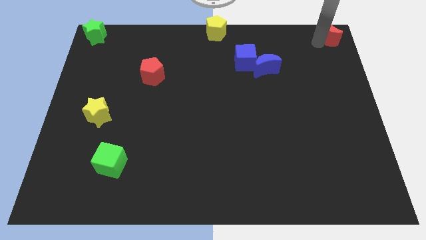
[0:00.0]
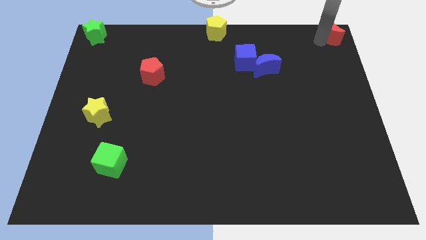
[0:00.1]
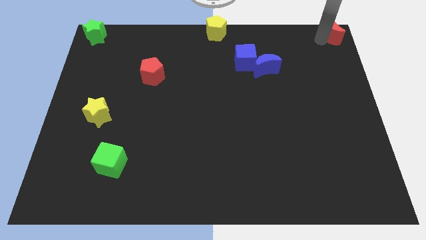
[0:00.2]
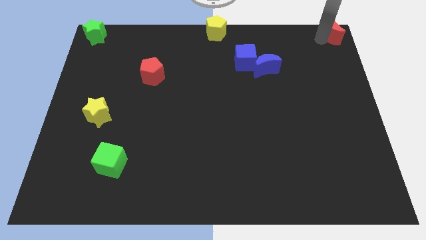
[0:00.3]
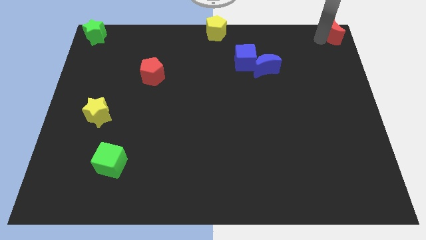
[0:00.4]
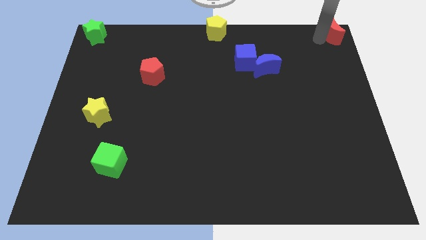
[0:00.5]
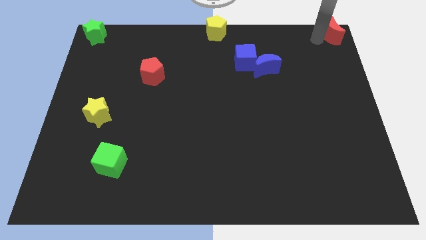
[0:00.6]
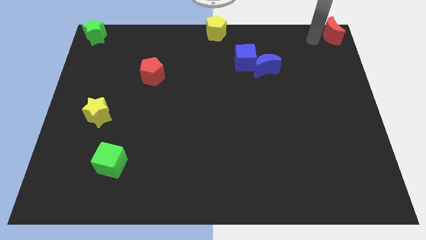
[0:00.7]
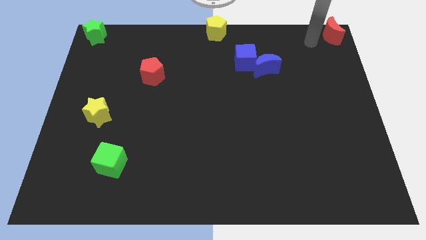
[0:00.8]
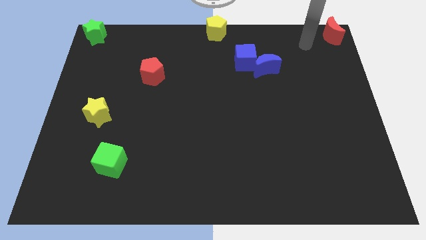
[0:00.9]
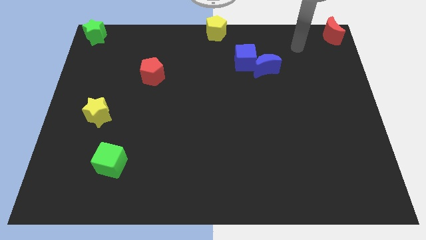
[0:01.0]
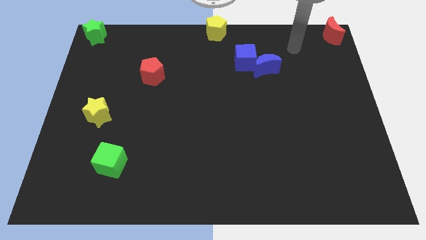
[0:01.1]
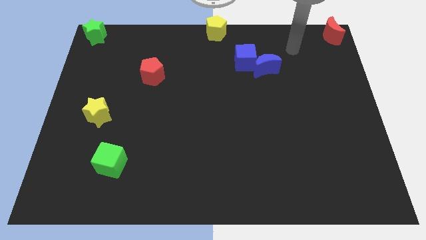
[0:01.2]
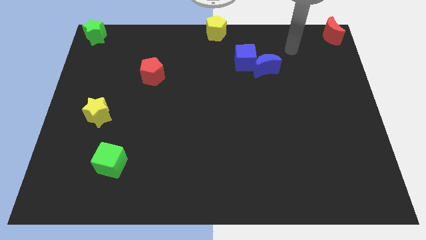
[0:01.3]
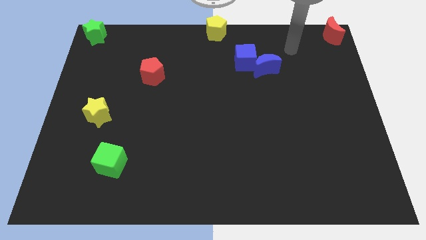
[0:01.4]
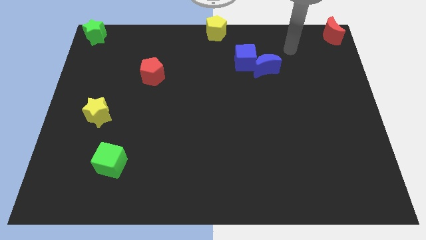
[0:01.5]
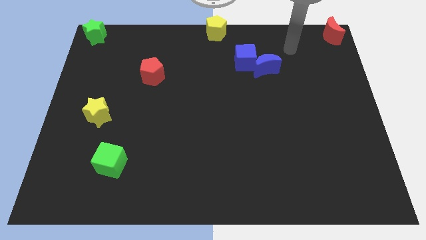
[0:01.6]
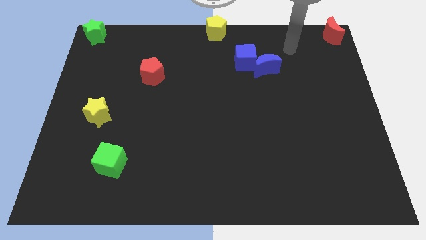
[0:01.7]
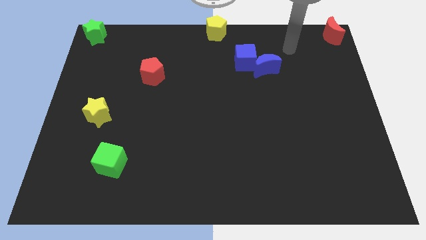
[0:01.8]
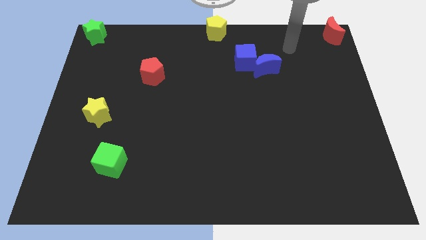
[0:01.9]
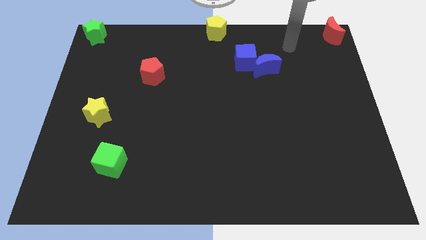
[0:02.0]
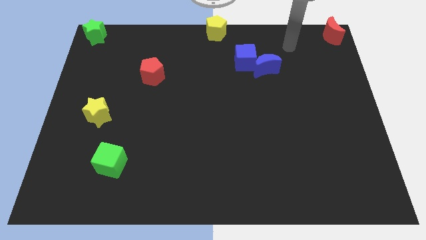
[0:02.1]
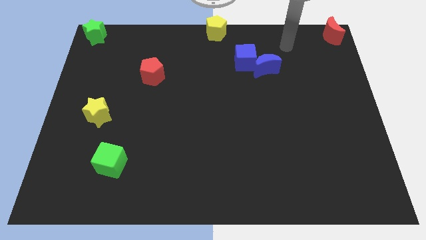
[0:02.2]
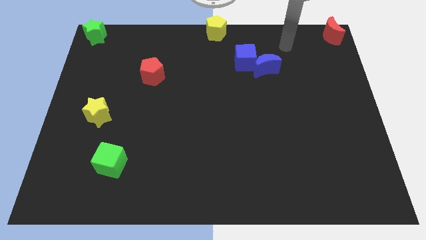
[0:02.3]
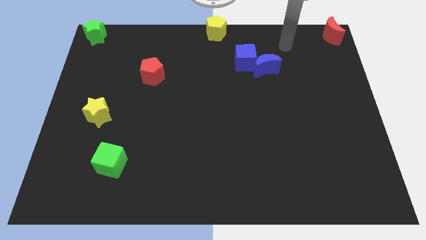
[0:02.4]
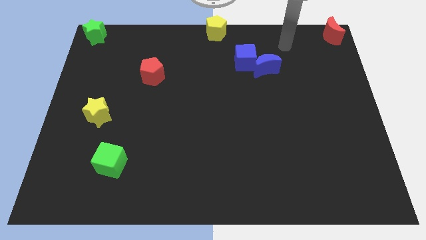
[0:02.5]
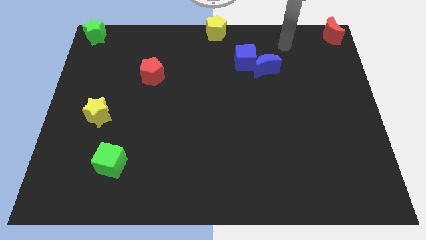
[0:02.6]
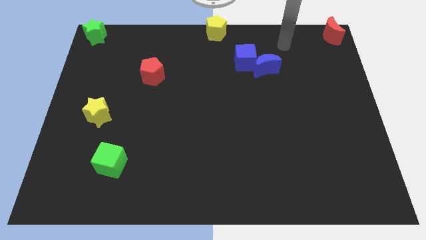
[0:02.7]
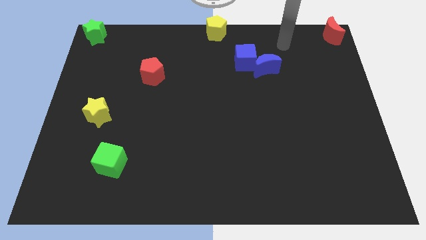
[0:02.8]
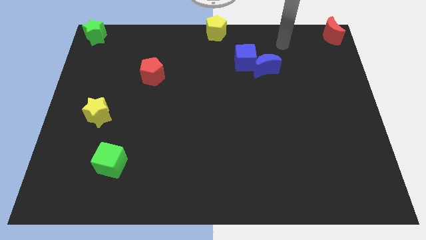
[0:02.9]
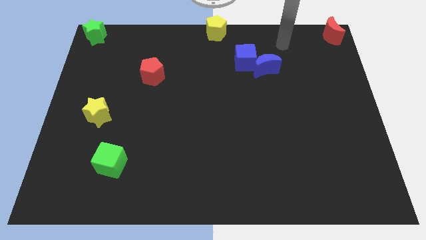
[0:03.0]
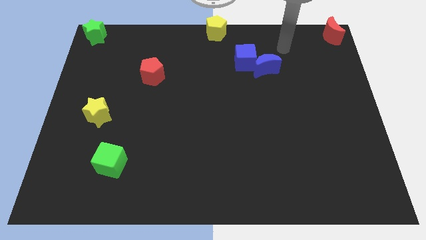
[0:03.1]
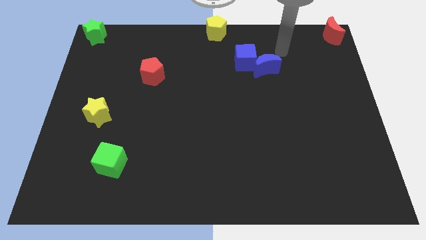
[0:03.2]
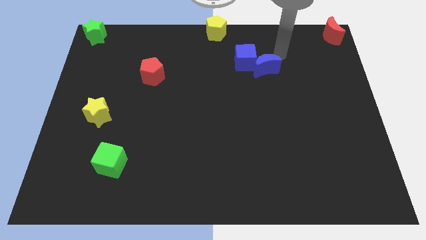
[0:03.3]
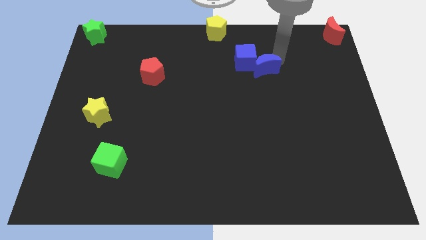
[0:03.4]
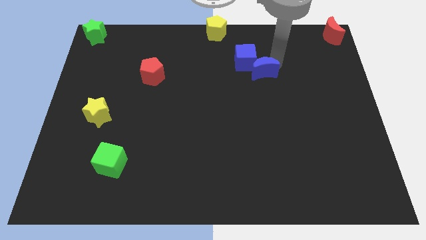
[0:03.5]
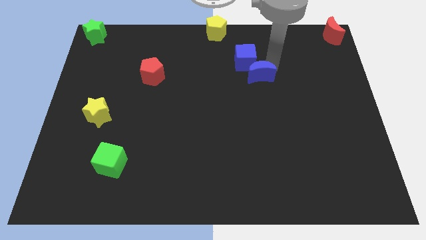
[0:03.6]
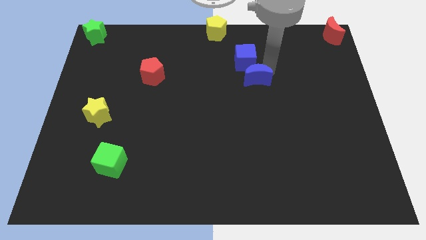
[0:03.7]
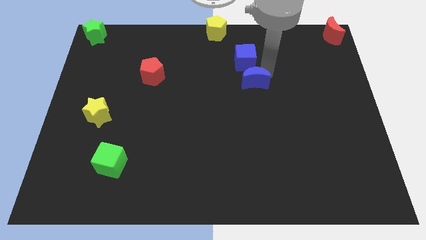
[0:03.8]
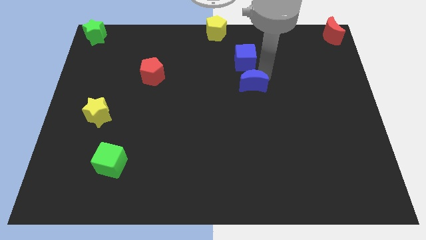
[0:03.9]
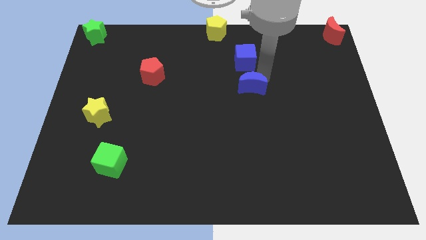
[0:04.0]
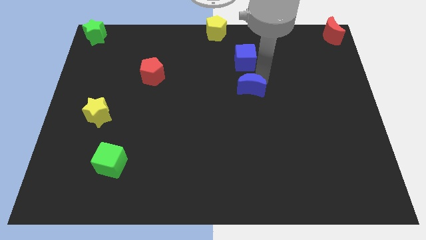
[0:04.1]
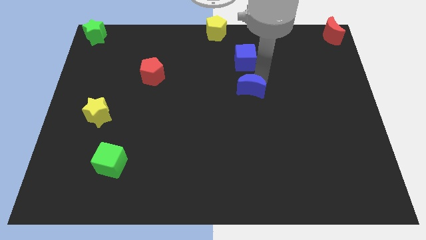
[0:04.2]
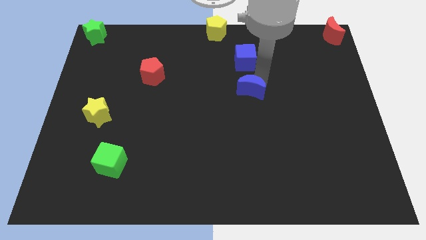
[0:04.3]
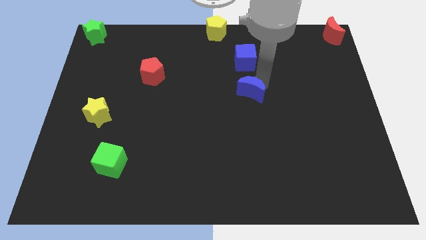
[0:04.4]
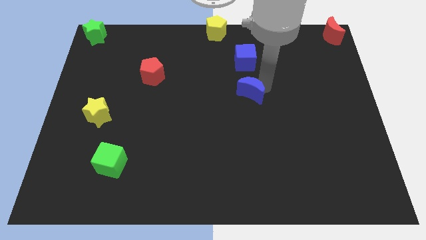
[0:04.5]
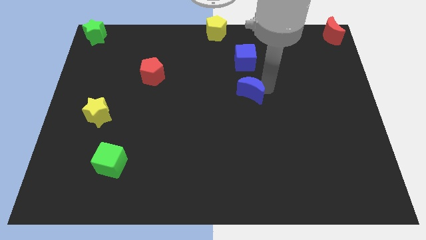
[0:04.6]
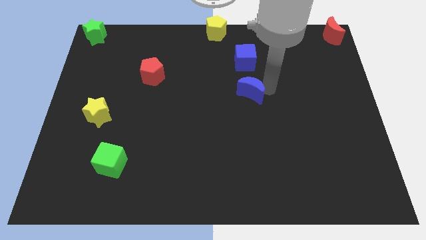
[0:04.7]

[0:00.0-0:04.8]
separate the blue moon from the blue cube

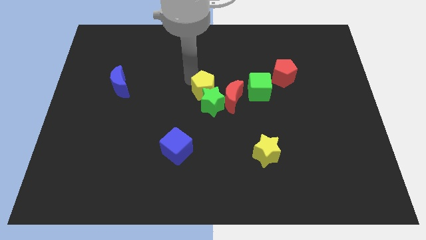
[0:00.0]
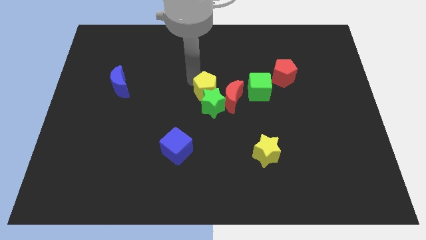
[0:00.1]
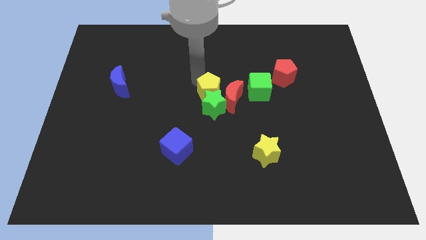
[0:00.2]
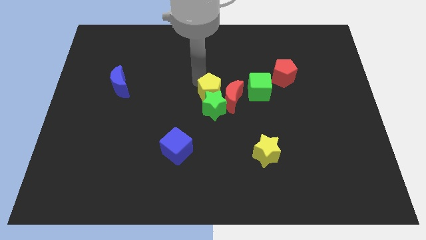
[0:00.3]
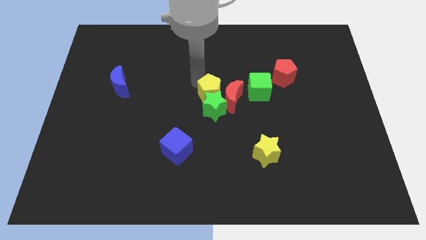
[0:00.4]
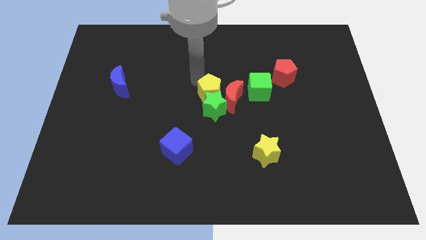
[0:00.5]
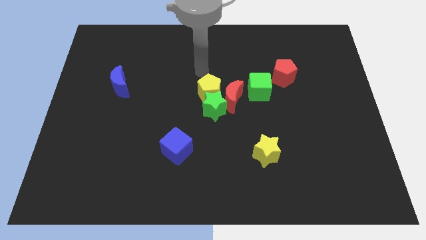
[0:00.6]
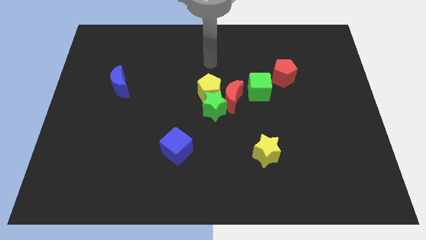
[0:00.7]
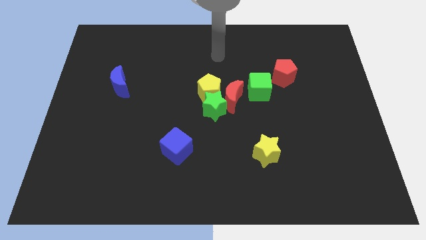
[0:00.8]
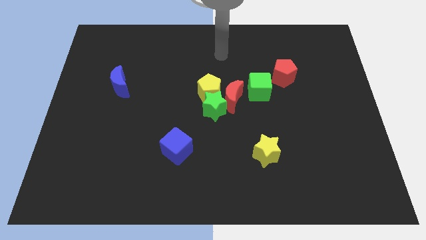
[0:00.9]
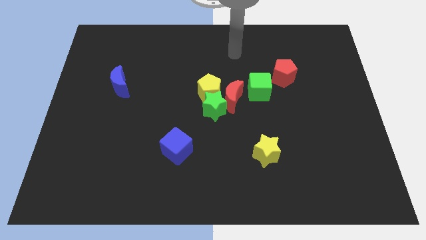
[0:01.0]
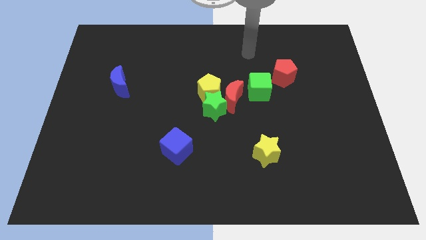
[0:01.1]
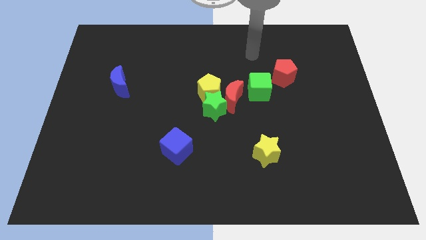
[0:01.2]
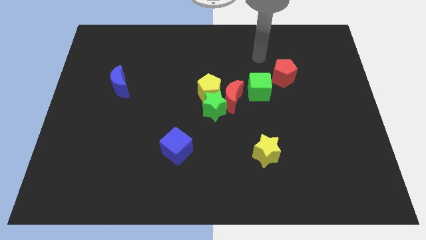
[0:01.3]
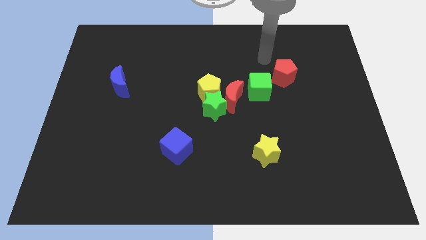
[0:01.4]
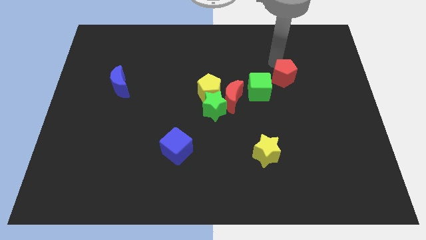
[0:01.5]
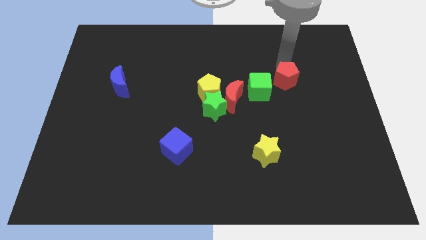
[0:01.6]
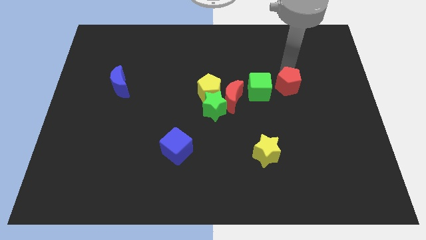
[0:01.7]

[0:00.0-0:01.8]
move your arm to the top of the red pentagon

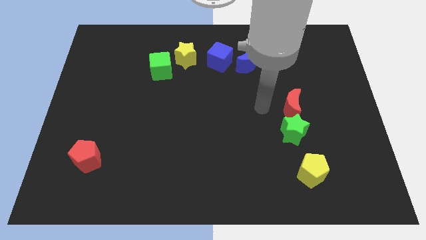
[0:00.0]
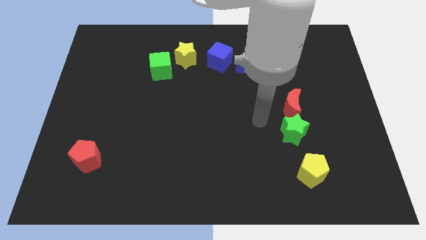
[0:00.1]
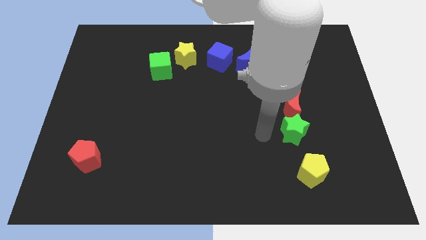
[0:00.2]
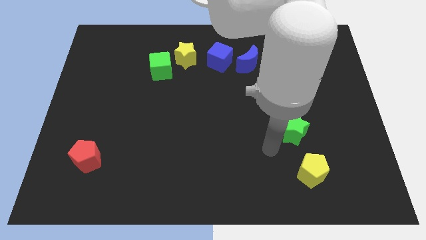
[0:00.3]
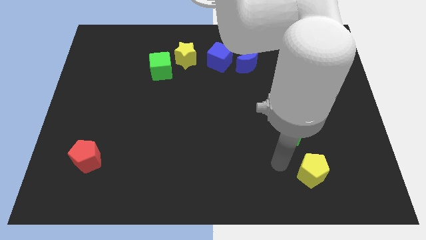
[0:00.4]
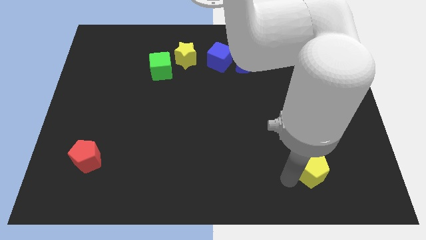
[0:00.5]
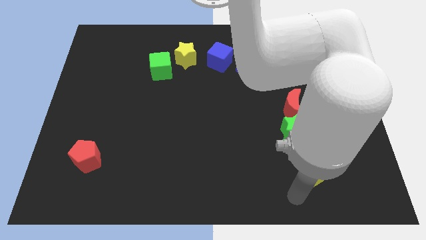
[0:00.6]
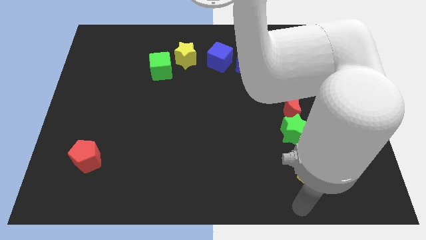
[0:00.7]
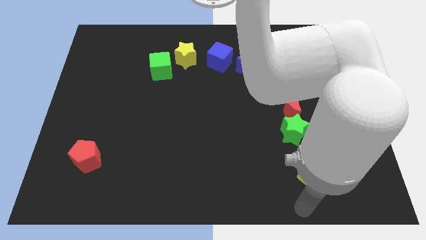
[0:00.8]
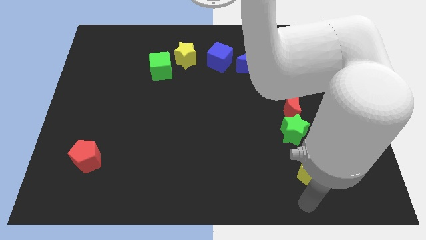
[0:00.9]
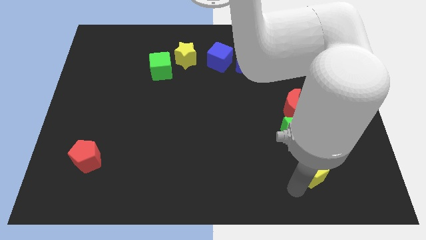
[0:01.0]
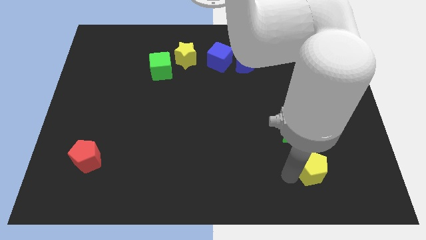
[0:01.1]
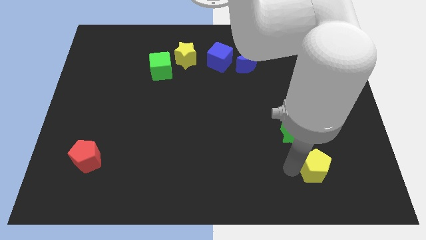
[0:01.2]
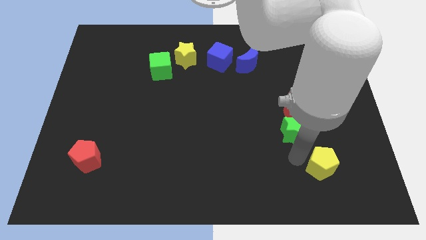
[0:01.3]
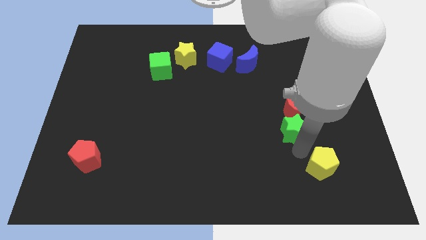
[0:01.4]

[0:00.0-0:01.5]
place the yellow pentagon diagonally on the bottom right side of the green star

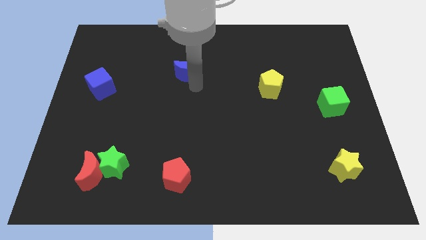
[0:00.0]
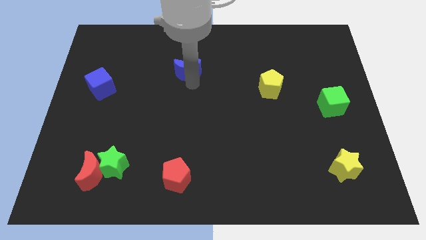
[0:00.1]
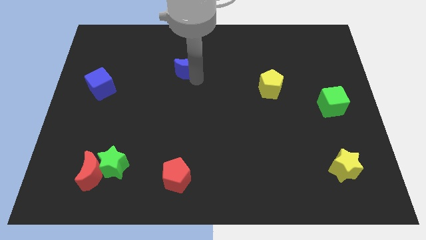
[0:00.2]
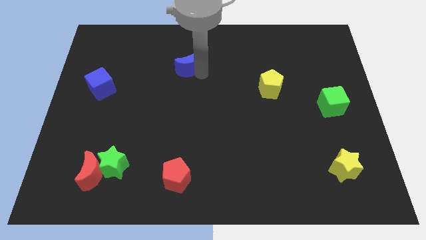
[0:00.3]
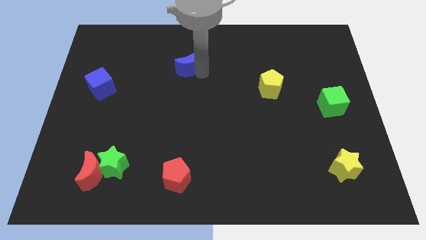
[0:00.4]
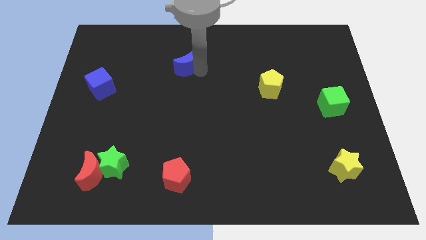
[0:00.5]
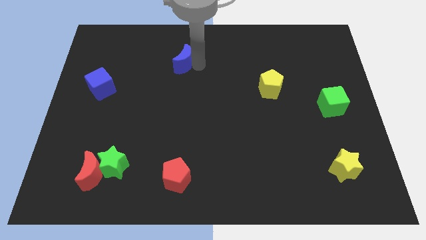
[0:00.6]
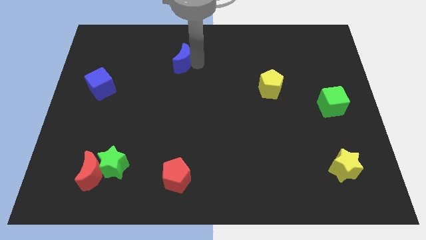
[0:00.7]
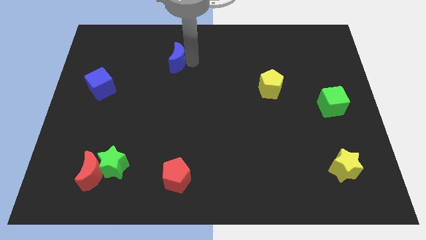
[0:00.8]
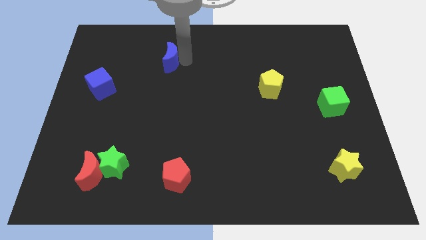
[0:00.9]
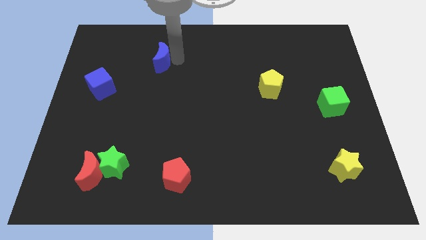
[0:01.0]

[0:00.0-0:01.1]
move the blue moon to the left side
